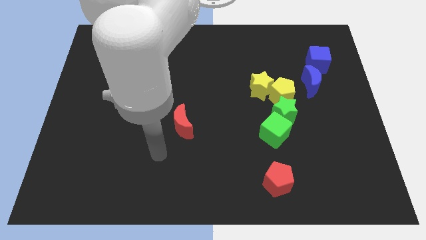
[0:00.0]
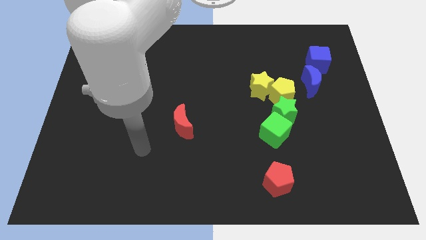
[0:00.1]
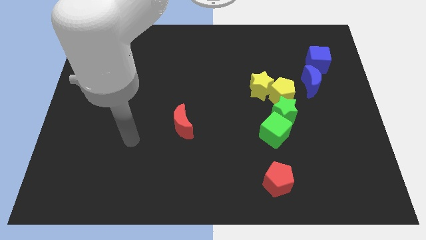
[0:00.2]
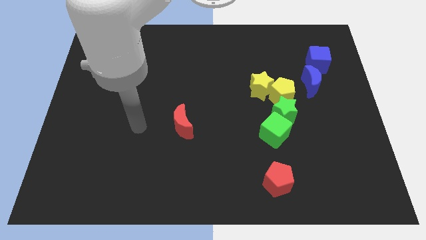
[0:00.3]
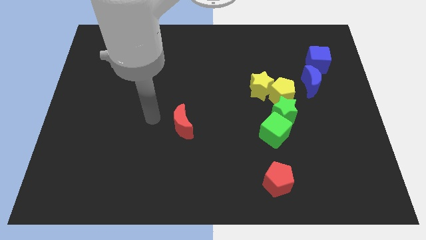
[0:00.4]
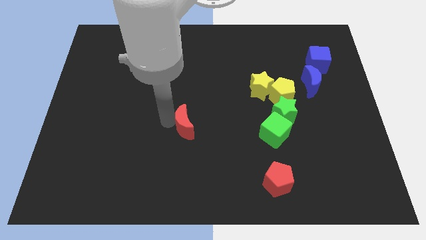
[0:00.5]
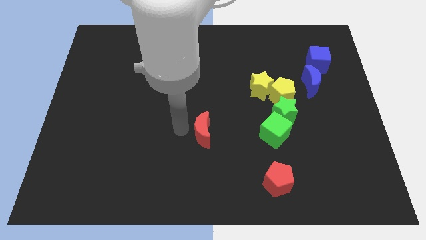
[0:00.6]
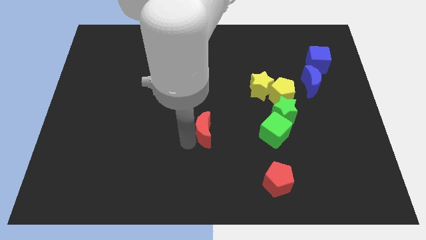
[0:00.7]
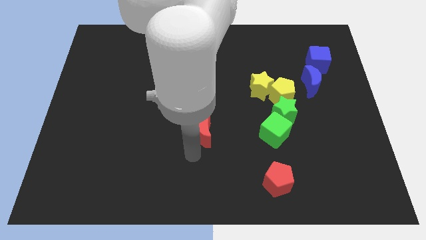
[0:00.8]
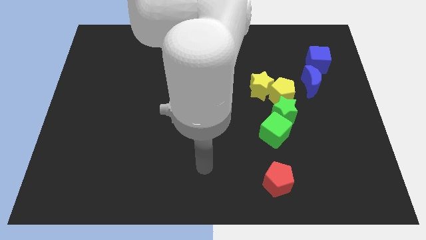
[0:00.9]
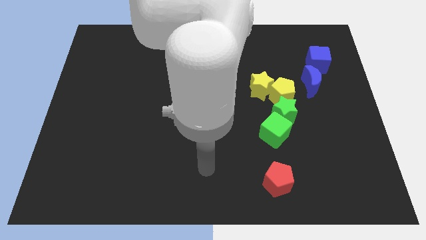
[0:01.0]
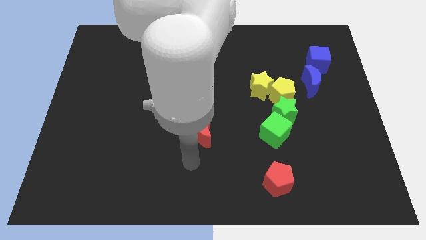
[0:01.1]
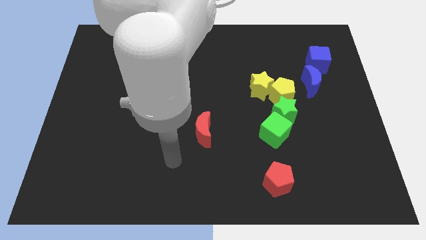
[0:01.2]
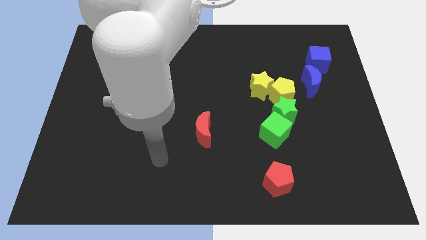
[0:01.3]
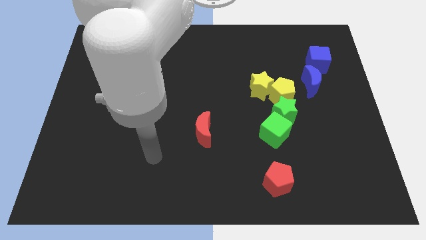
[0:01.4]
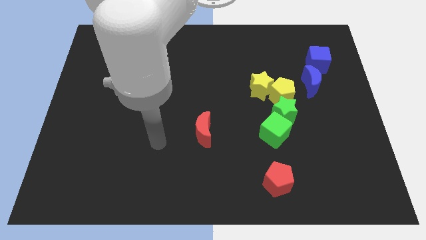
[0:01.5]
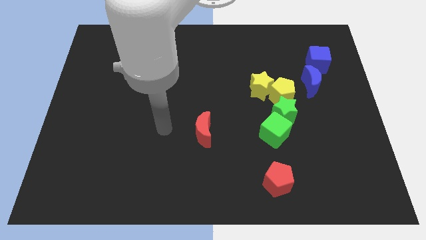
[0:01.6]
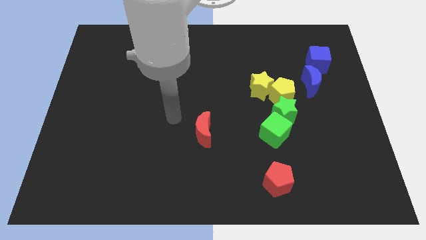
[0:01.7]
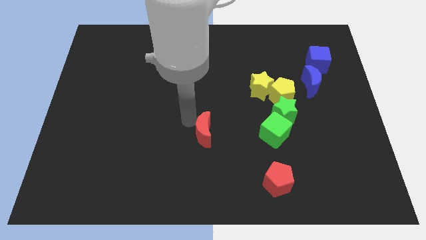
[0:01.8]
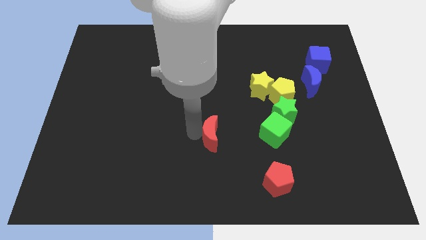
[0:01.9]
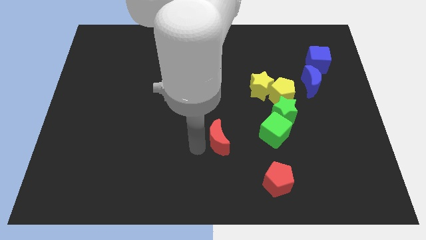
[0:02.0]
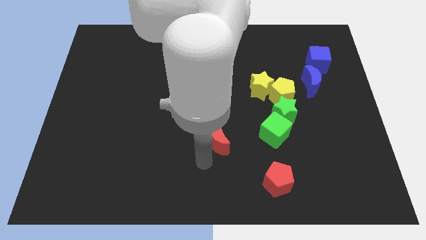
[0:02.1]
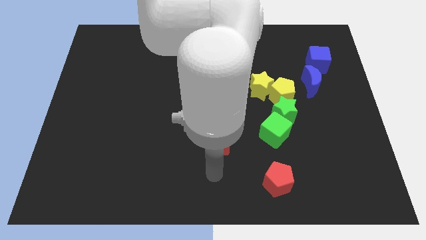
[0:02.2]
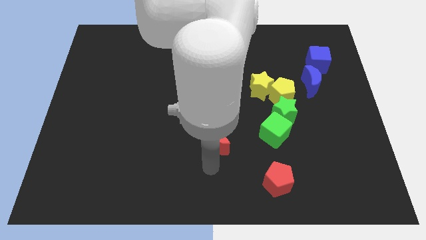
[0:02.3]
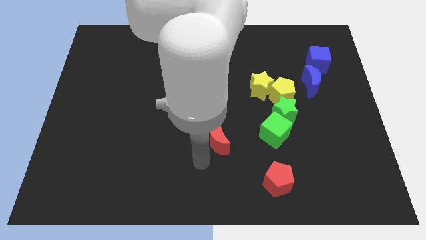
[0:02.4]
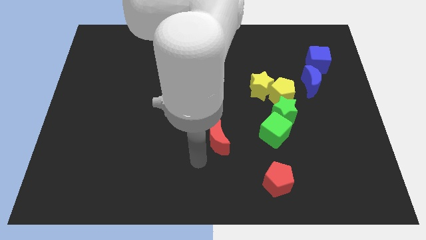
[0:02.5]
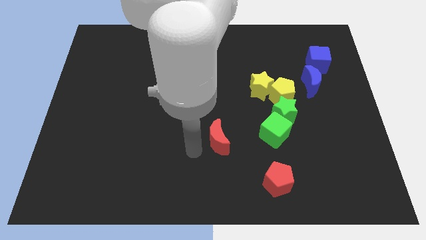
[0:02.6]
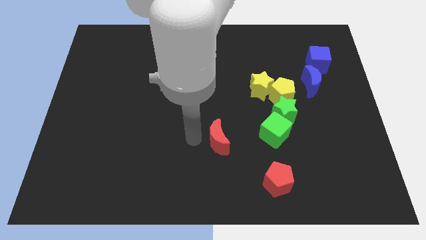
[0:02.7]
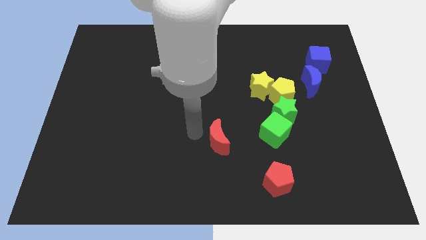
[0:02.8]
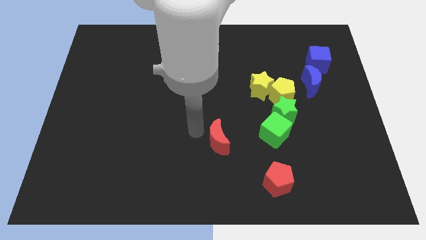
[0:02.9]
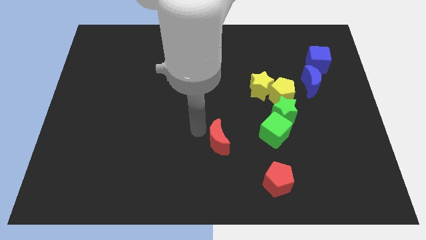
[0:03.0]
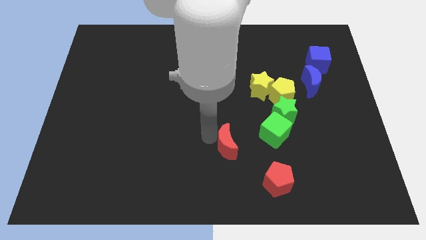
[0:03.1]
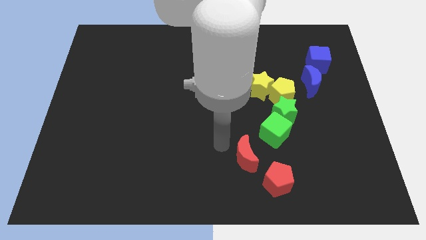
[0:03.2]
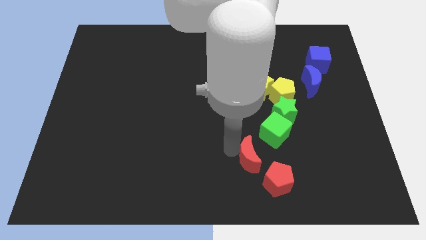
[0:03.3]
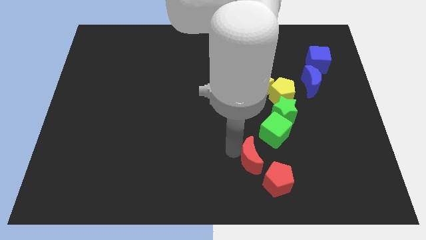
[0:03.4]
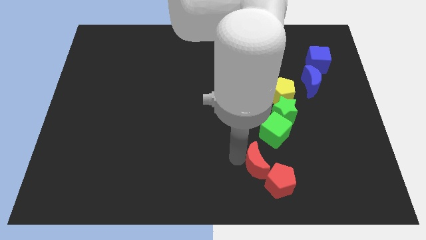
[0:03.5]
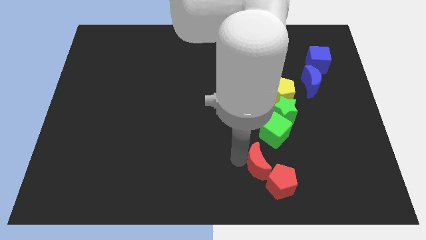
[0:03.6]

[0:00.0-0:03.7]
push the red crescent into the red pentagon

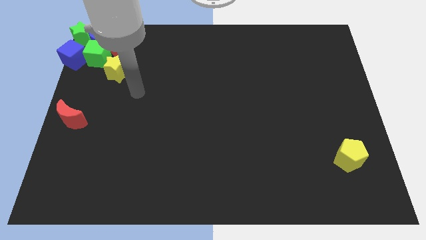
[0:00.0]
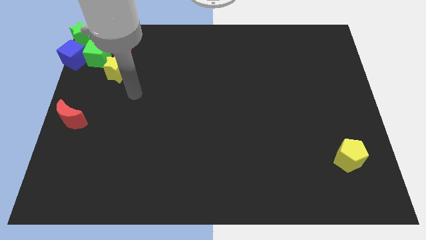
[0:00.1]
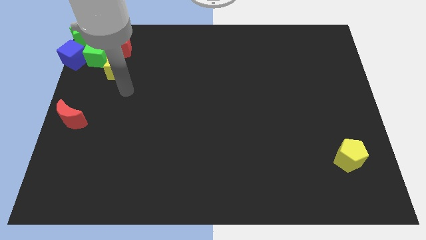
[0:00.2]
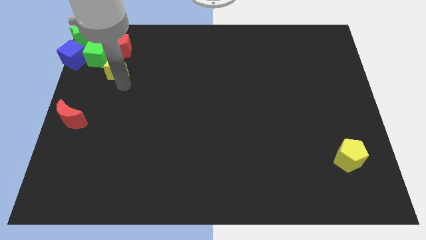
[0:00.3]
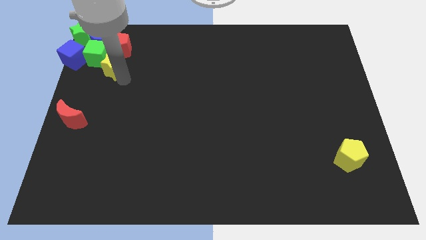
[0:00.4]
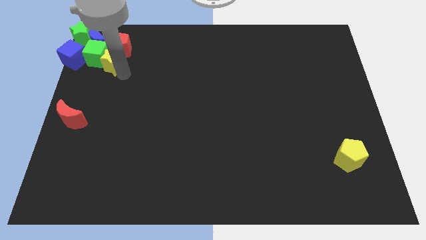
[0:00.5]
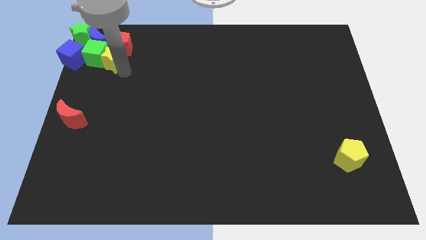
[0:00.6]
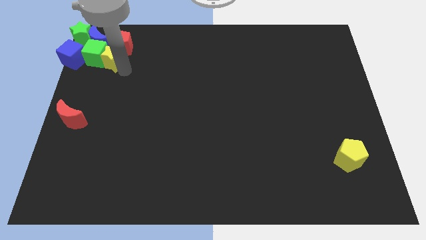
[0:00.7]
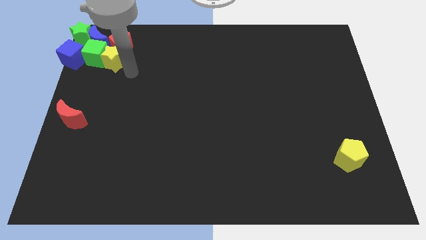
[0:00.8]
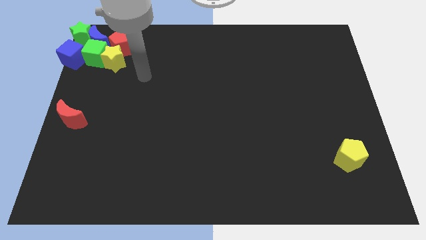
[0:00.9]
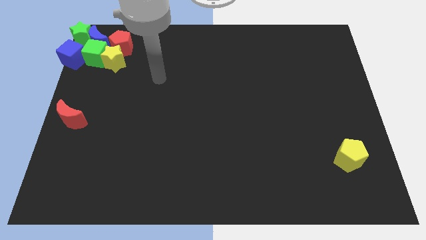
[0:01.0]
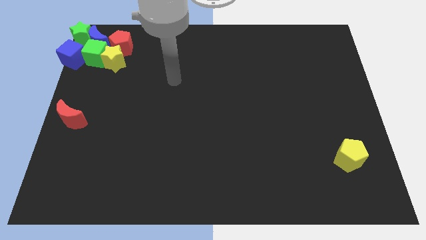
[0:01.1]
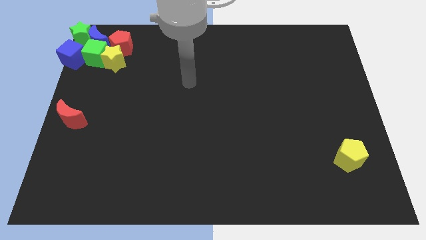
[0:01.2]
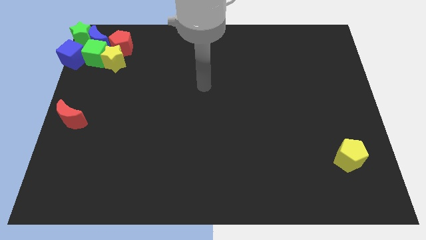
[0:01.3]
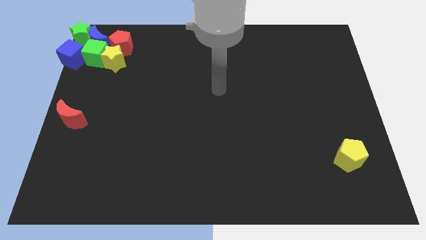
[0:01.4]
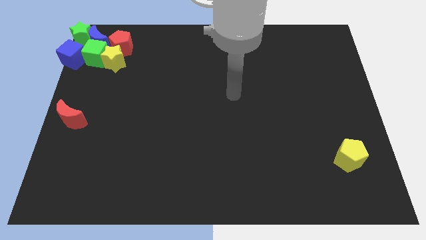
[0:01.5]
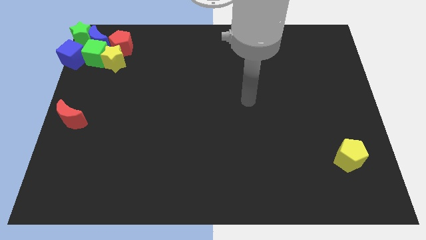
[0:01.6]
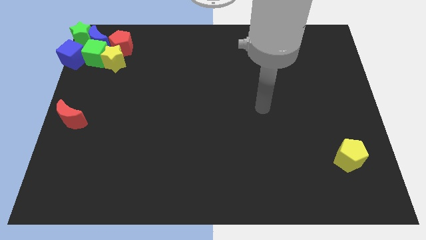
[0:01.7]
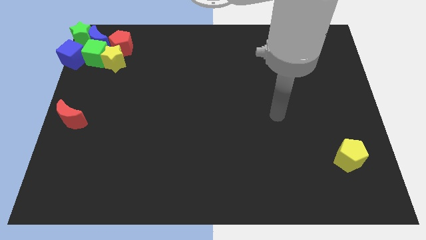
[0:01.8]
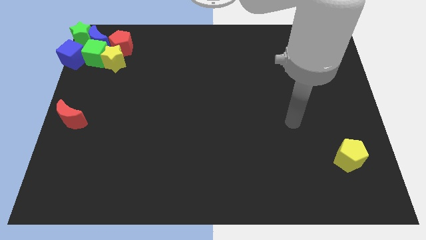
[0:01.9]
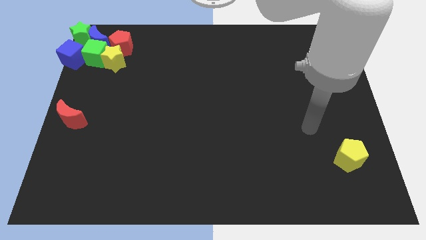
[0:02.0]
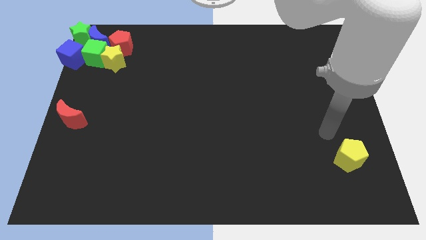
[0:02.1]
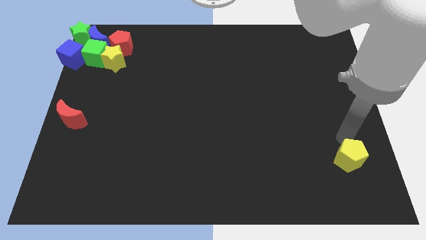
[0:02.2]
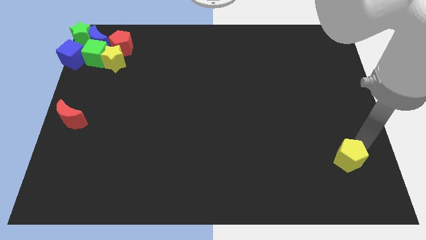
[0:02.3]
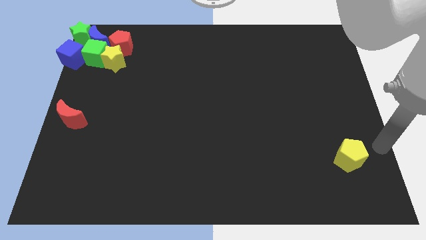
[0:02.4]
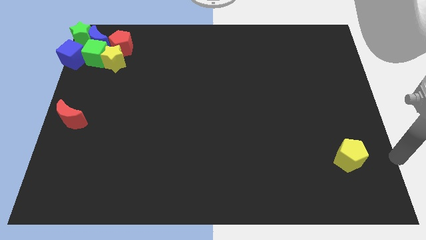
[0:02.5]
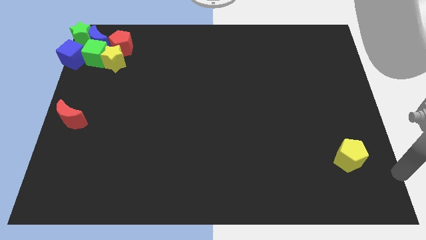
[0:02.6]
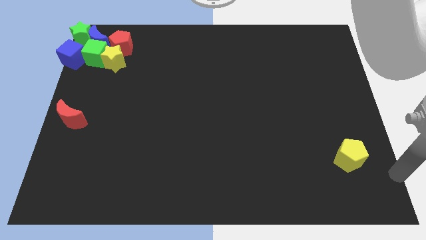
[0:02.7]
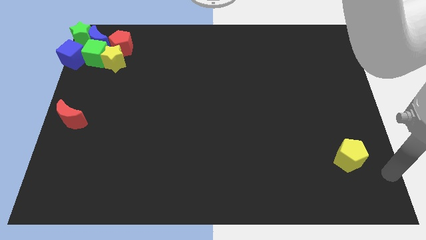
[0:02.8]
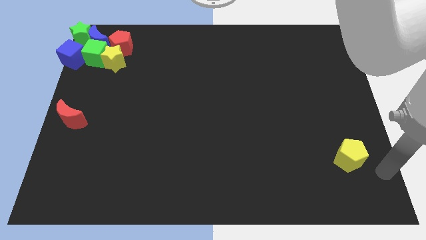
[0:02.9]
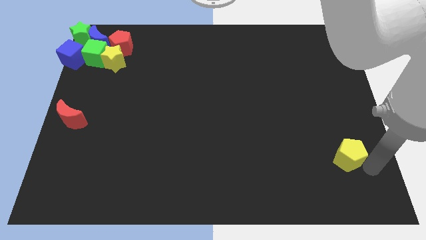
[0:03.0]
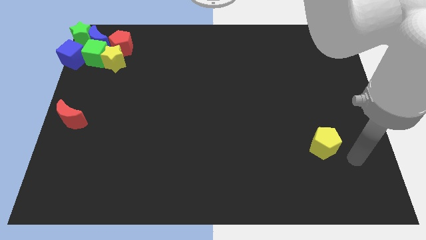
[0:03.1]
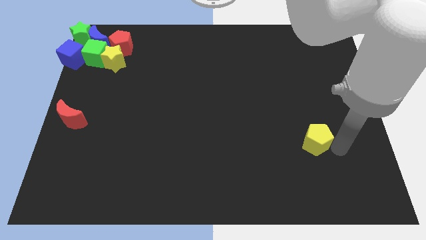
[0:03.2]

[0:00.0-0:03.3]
push the yellow star into the green cube from right side

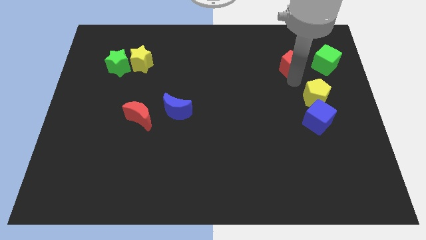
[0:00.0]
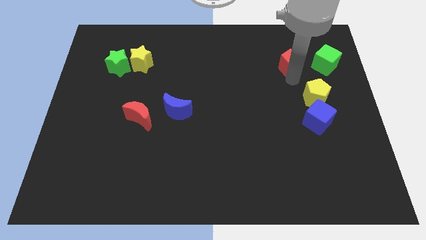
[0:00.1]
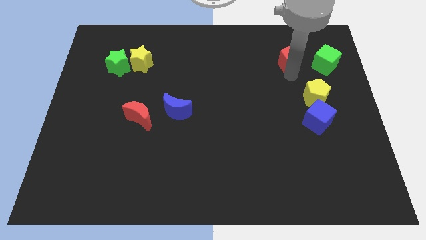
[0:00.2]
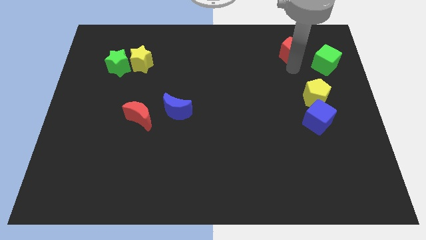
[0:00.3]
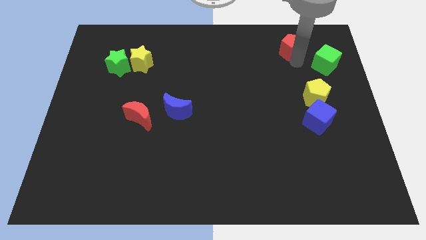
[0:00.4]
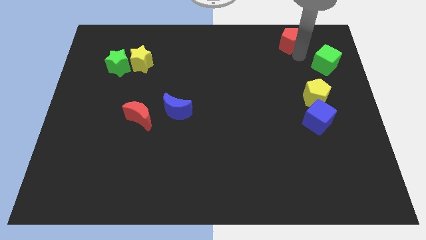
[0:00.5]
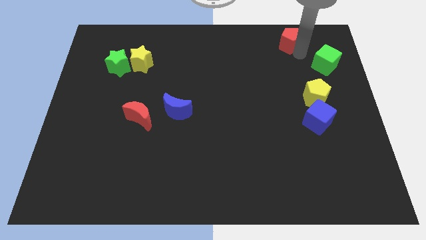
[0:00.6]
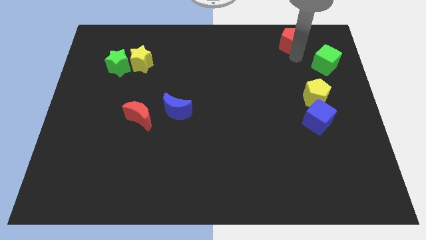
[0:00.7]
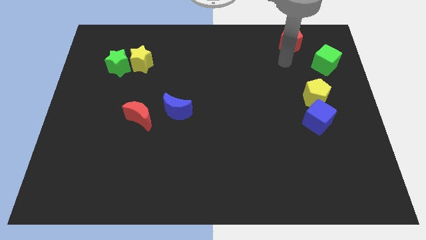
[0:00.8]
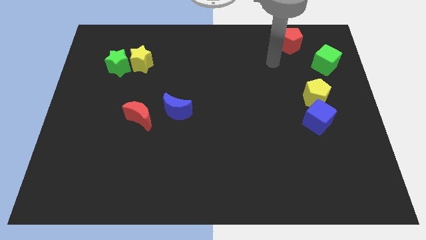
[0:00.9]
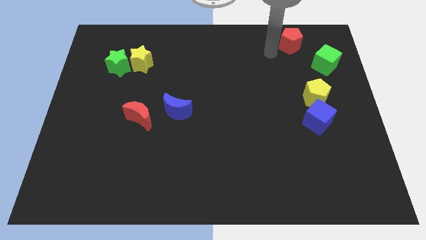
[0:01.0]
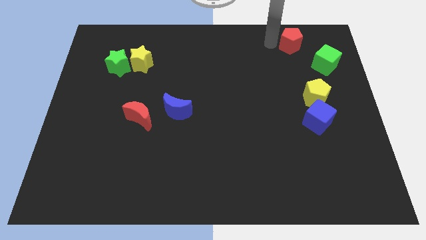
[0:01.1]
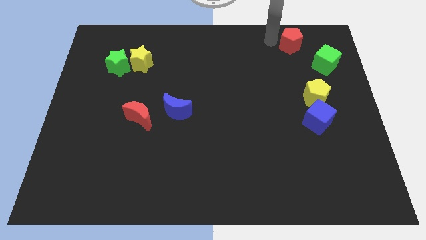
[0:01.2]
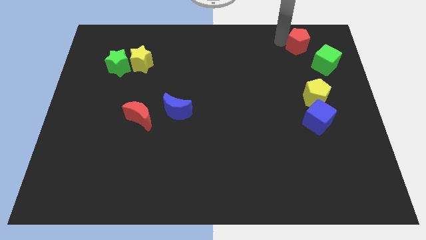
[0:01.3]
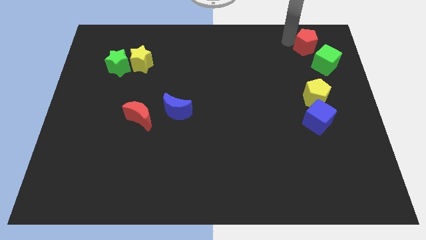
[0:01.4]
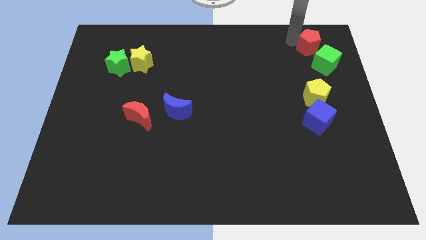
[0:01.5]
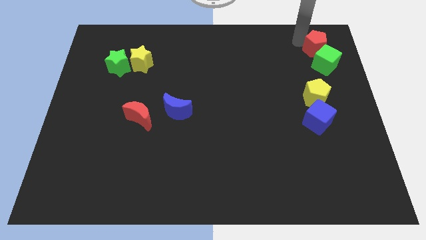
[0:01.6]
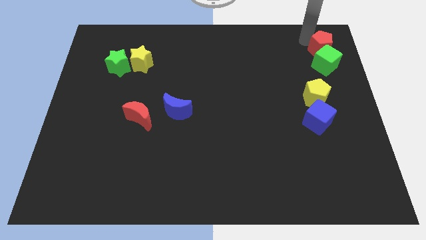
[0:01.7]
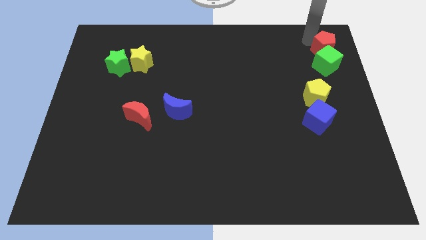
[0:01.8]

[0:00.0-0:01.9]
place the red pentagon above the green cube

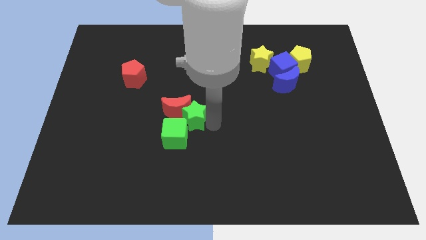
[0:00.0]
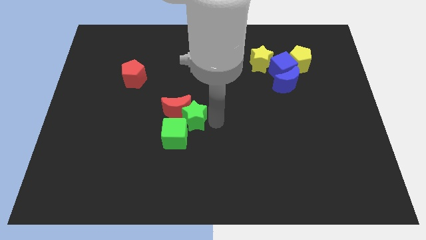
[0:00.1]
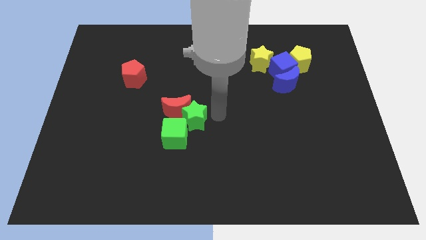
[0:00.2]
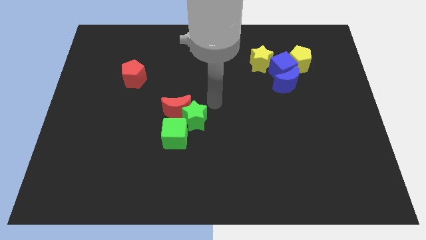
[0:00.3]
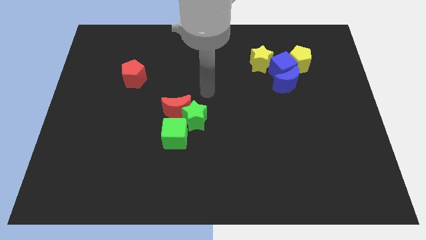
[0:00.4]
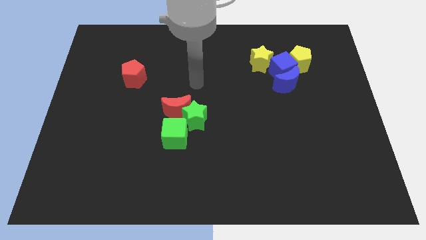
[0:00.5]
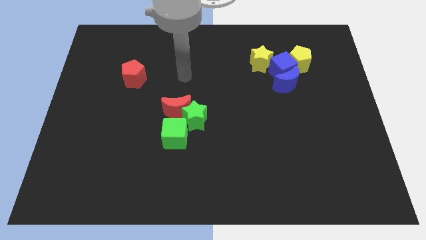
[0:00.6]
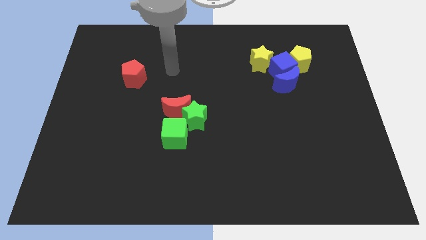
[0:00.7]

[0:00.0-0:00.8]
move the arm to the right of the red pentagon
